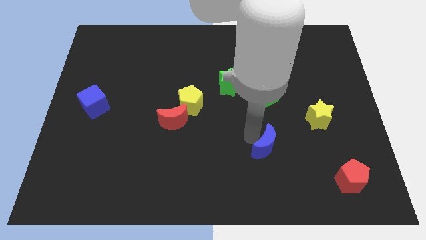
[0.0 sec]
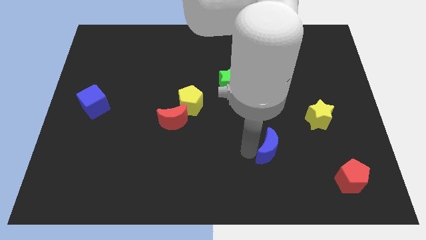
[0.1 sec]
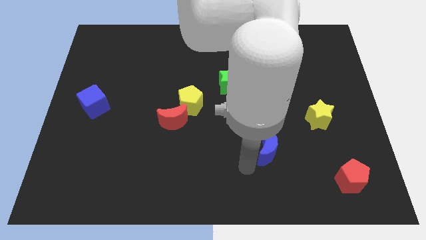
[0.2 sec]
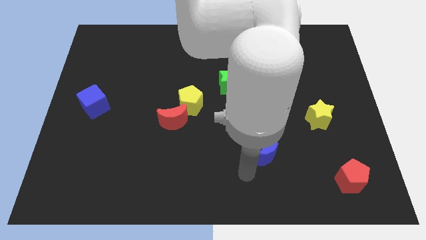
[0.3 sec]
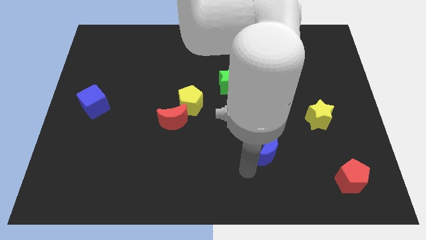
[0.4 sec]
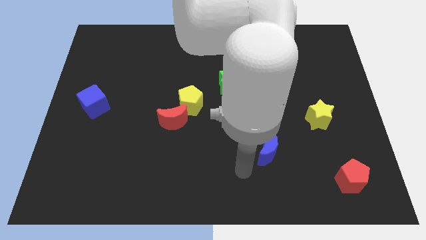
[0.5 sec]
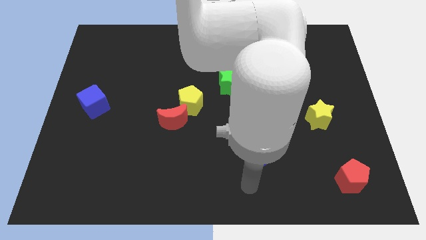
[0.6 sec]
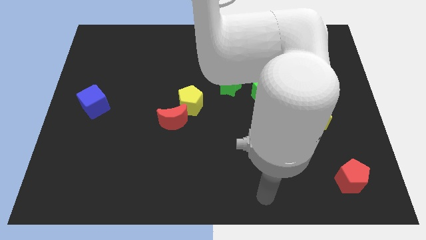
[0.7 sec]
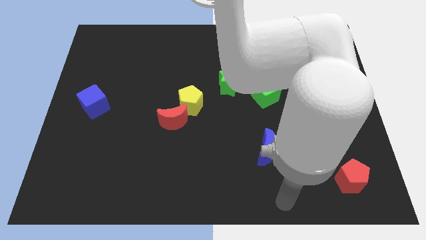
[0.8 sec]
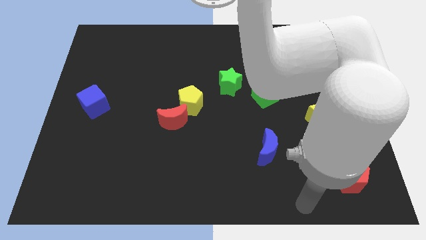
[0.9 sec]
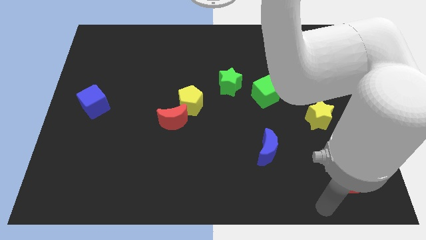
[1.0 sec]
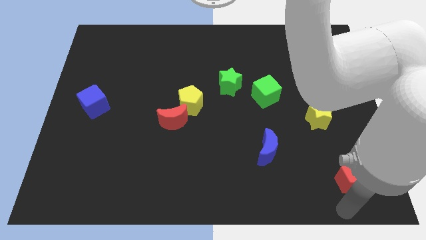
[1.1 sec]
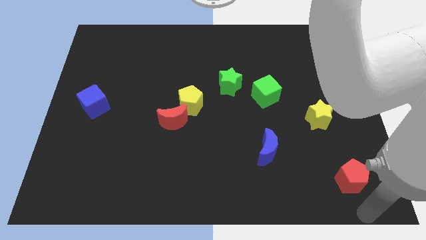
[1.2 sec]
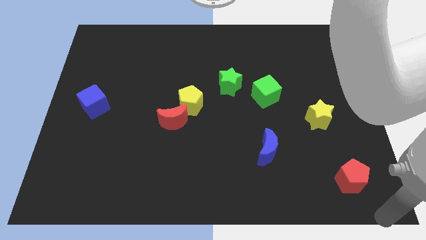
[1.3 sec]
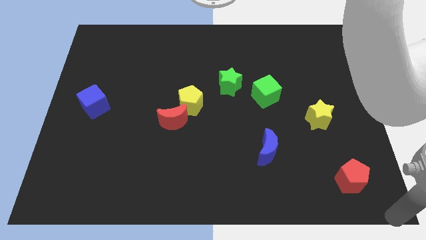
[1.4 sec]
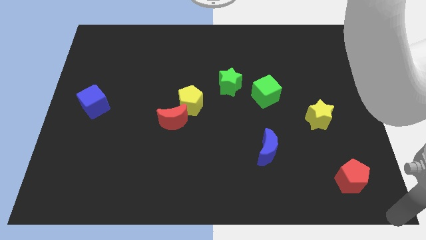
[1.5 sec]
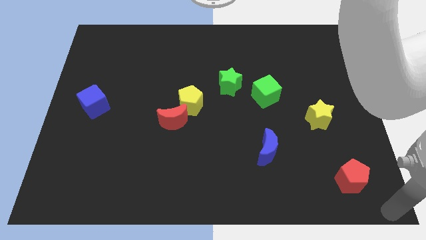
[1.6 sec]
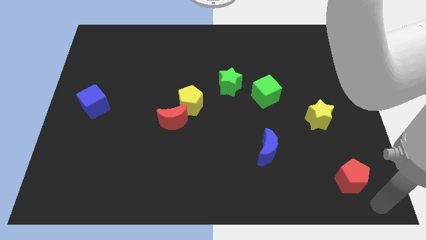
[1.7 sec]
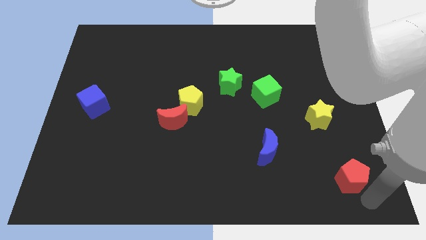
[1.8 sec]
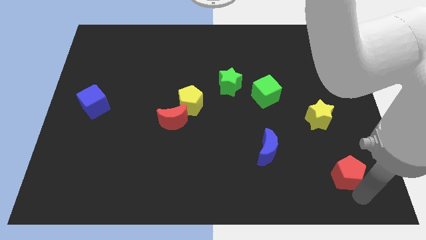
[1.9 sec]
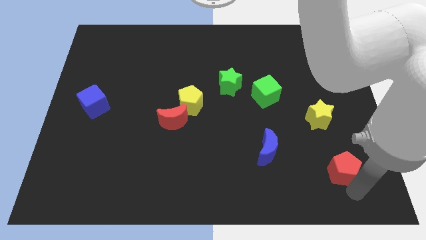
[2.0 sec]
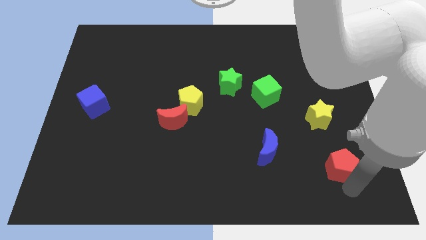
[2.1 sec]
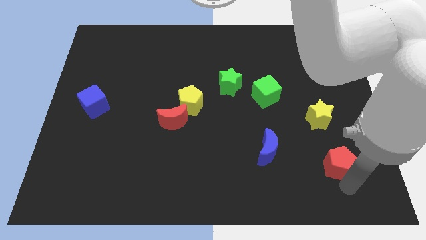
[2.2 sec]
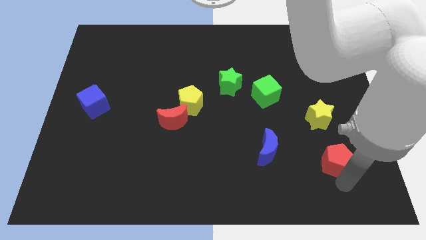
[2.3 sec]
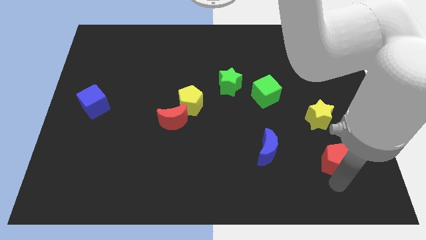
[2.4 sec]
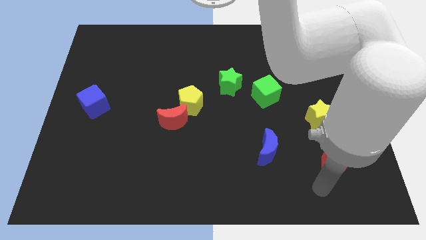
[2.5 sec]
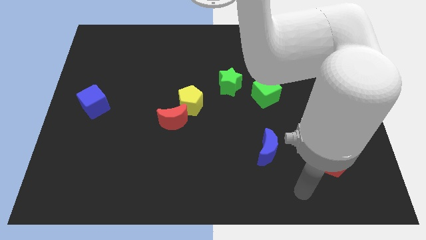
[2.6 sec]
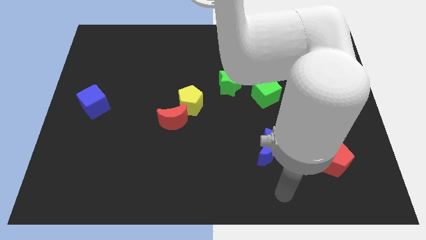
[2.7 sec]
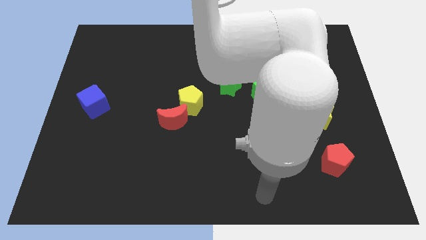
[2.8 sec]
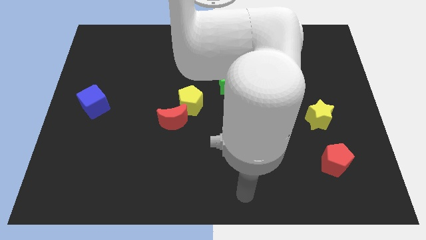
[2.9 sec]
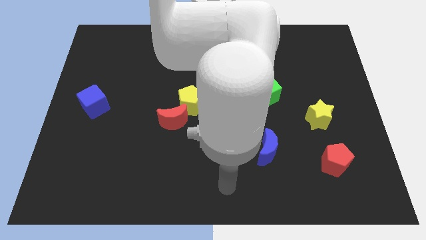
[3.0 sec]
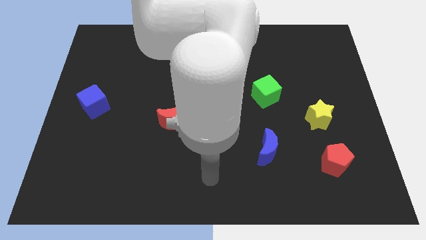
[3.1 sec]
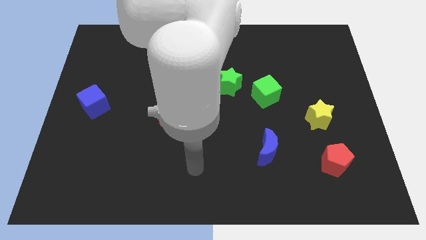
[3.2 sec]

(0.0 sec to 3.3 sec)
slide the red pentagon slightly towards the yellow star

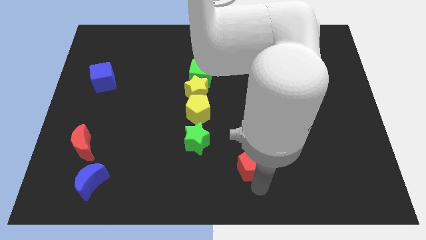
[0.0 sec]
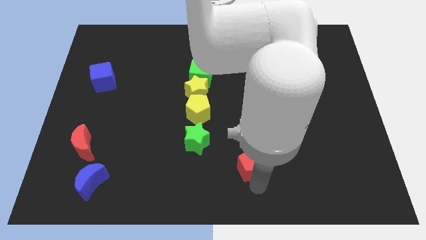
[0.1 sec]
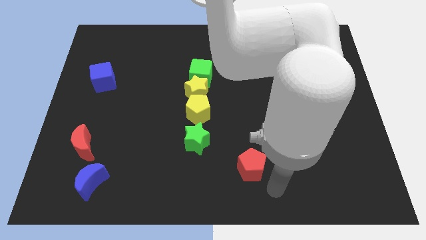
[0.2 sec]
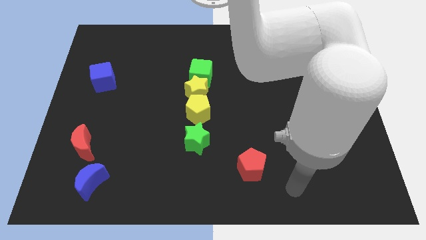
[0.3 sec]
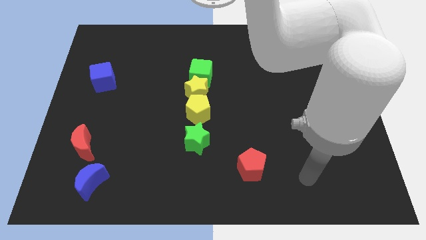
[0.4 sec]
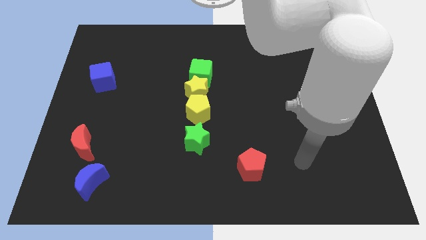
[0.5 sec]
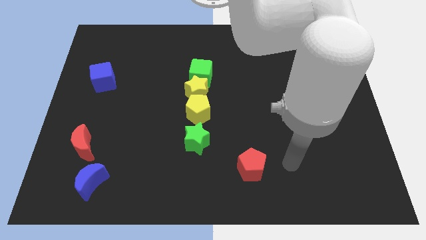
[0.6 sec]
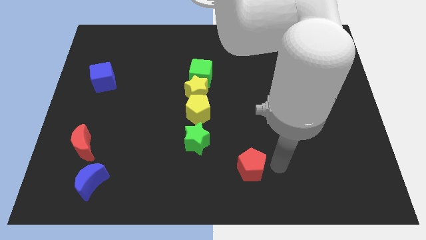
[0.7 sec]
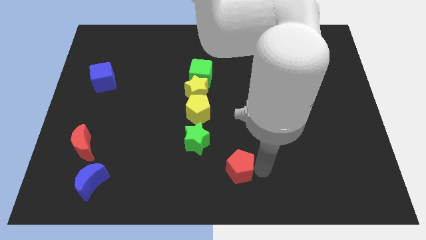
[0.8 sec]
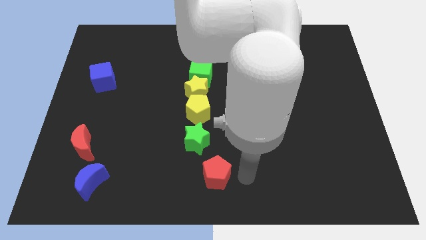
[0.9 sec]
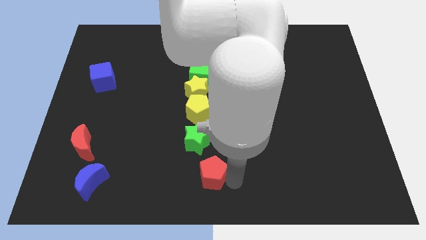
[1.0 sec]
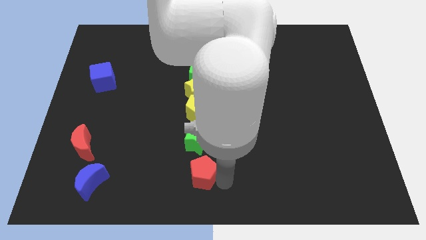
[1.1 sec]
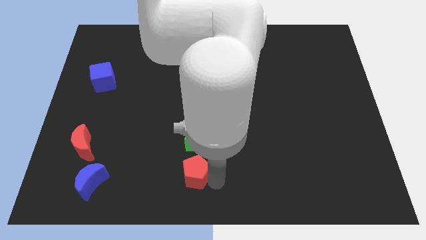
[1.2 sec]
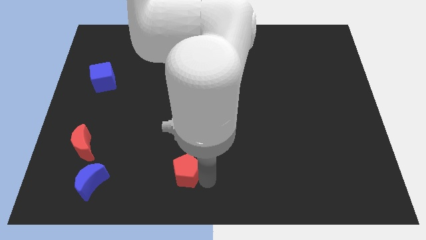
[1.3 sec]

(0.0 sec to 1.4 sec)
move the red pentagon in the vertical line below the green star

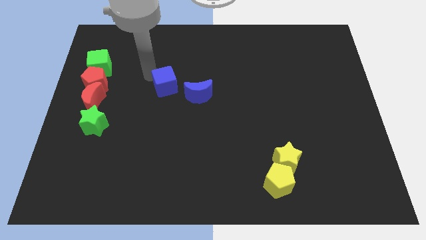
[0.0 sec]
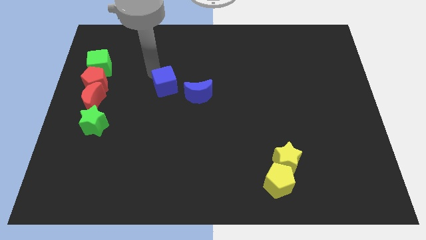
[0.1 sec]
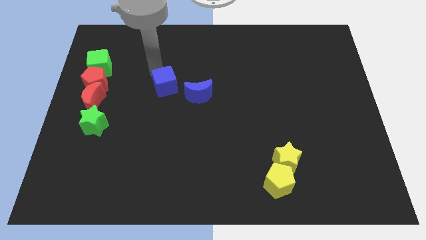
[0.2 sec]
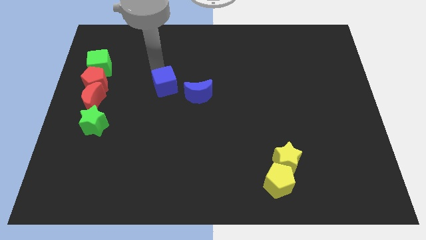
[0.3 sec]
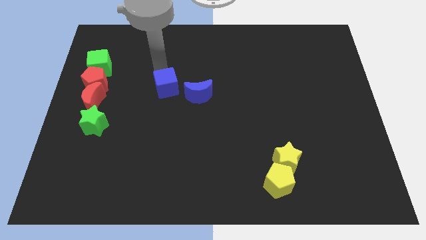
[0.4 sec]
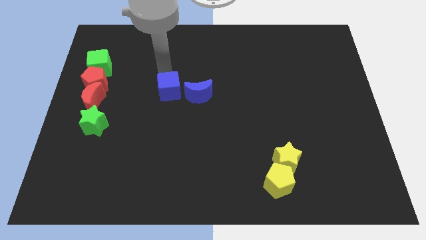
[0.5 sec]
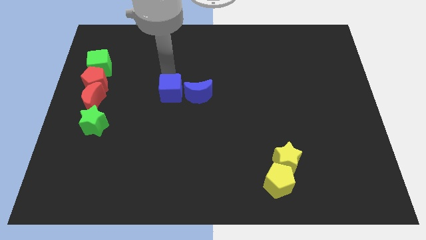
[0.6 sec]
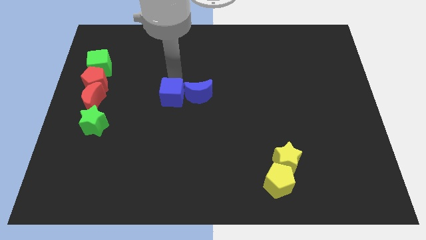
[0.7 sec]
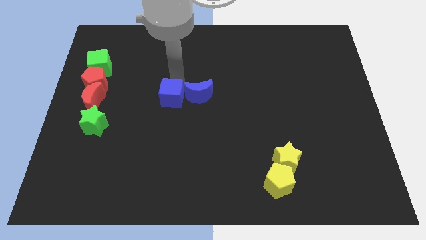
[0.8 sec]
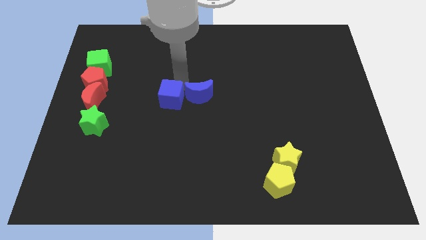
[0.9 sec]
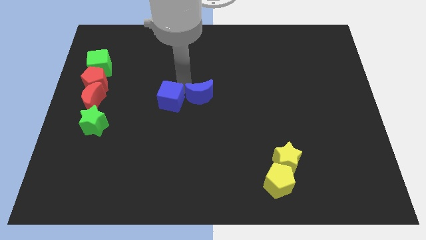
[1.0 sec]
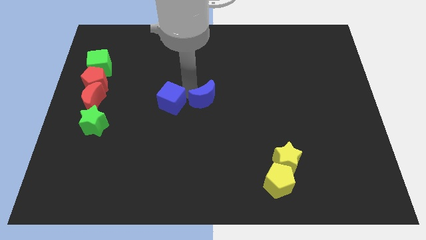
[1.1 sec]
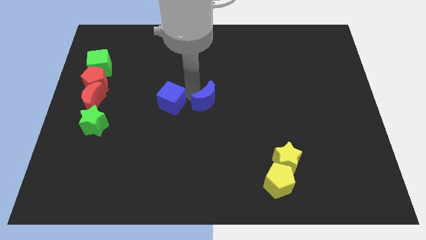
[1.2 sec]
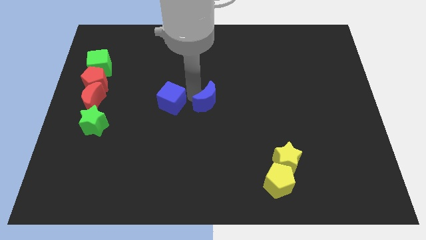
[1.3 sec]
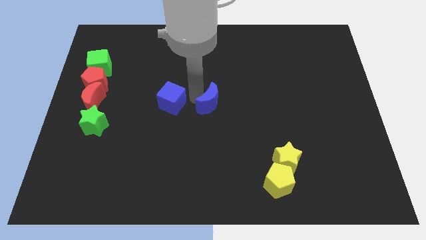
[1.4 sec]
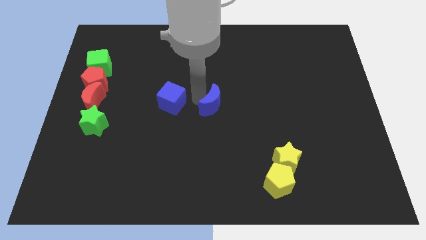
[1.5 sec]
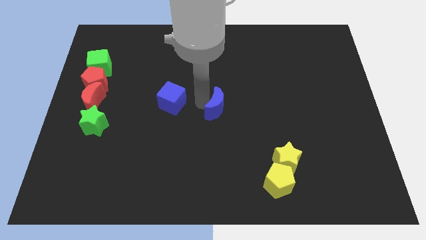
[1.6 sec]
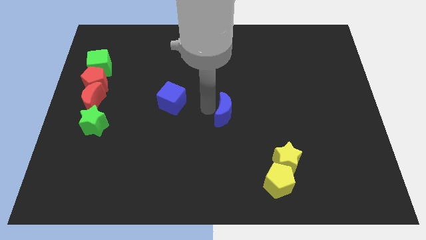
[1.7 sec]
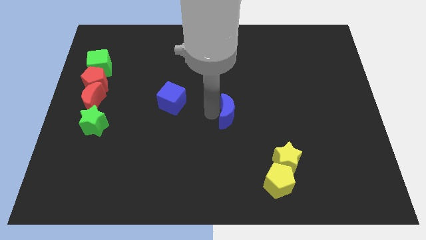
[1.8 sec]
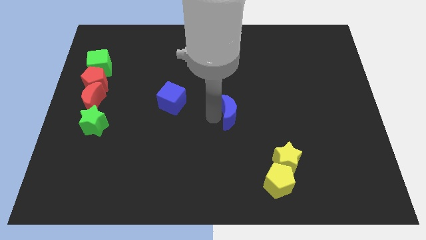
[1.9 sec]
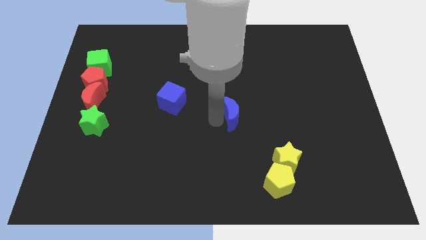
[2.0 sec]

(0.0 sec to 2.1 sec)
move the blue crescent to the center of the board

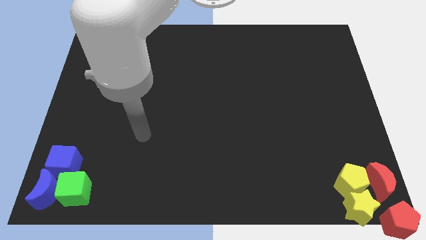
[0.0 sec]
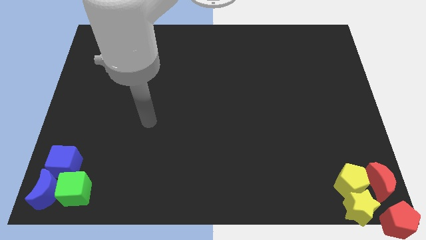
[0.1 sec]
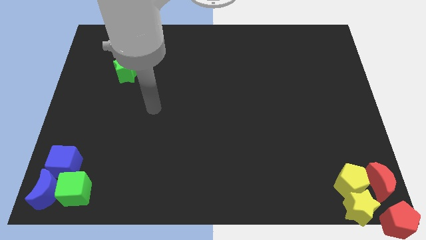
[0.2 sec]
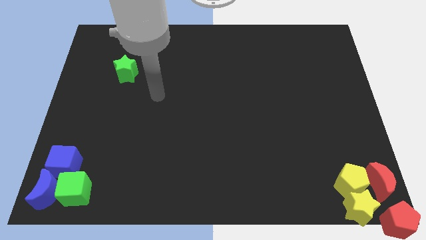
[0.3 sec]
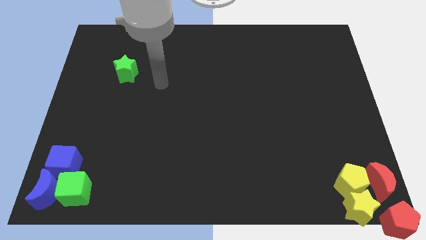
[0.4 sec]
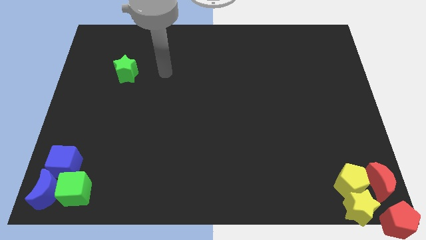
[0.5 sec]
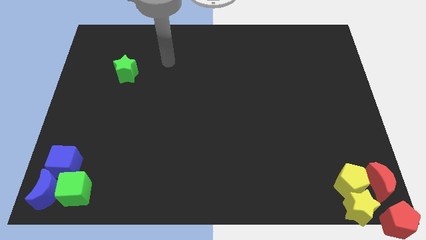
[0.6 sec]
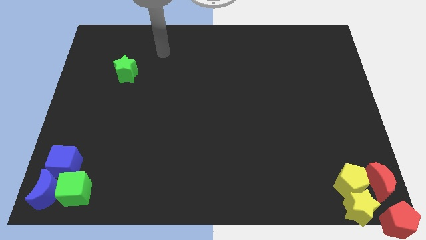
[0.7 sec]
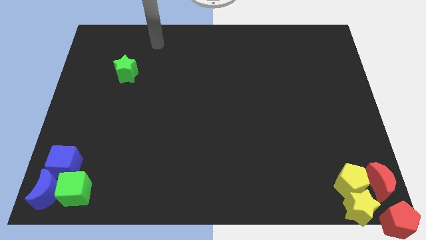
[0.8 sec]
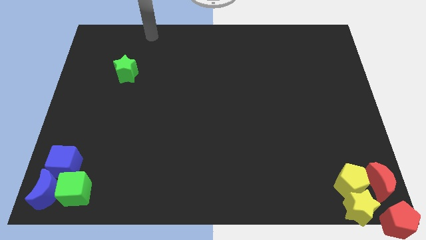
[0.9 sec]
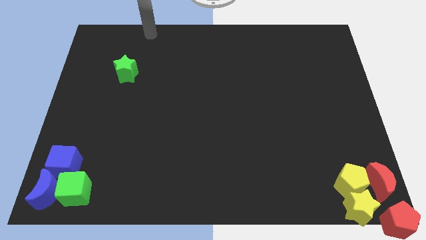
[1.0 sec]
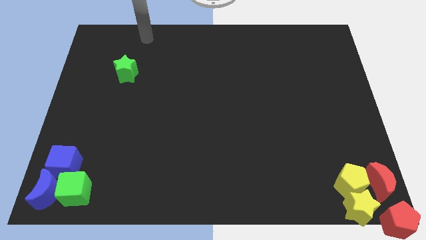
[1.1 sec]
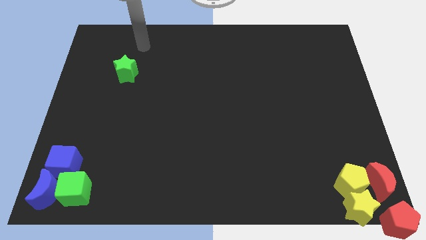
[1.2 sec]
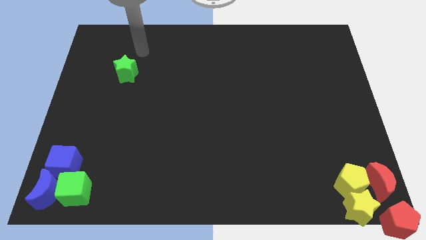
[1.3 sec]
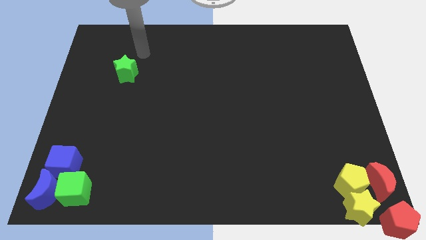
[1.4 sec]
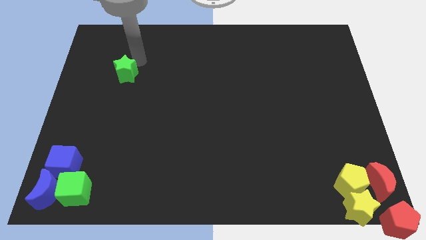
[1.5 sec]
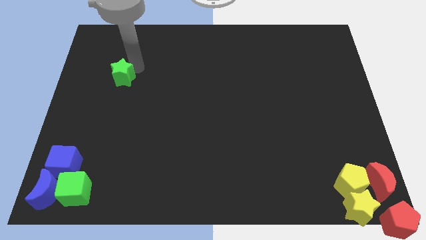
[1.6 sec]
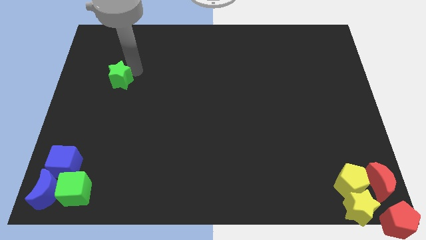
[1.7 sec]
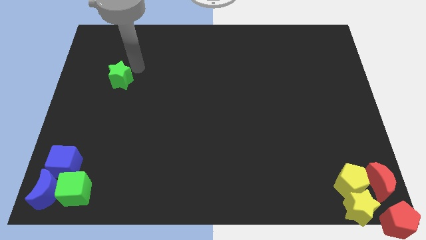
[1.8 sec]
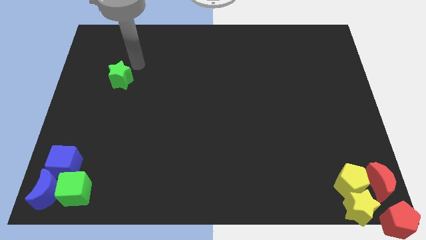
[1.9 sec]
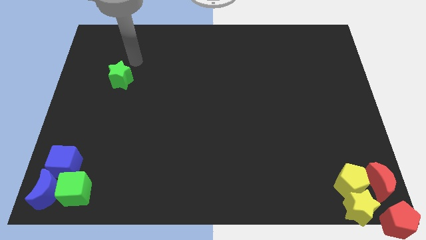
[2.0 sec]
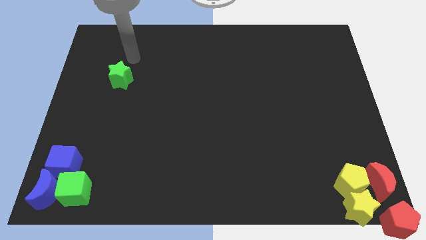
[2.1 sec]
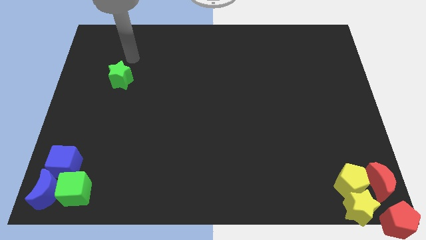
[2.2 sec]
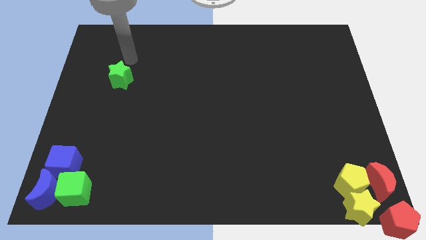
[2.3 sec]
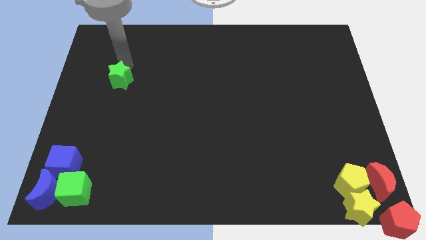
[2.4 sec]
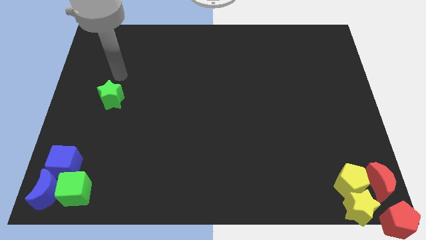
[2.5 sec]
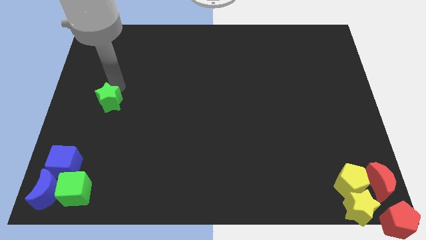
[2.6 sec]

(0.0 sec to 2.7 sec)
move the green star slightly down
